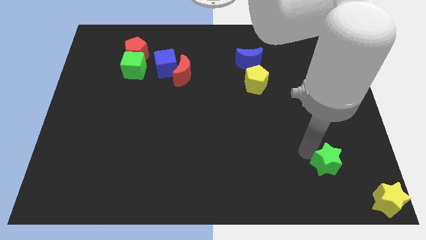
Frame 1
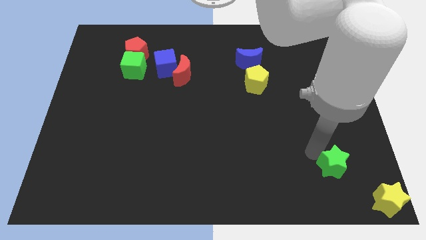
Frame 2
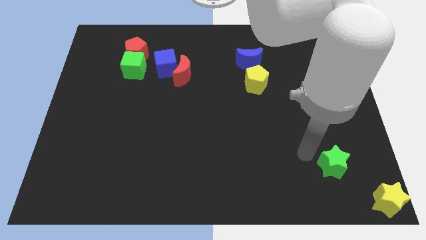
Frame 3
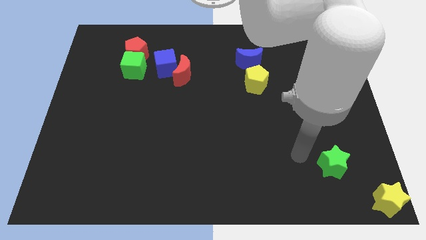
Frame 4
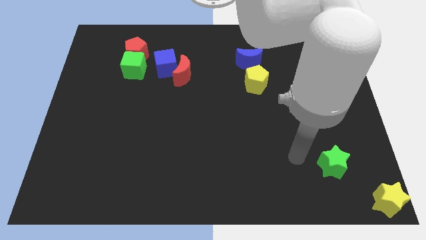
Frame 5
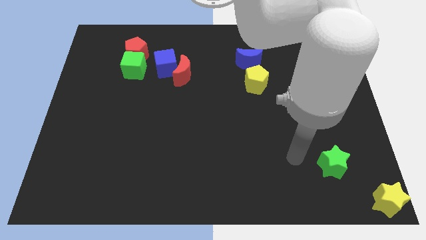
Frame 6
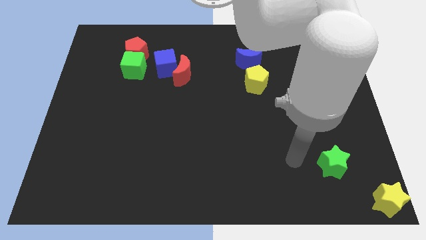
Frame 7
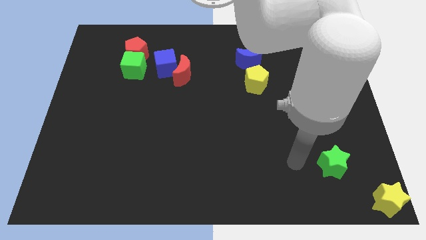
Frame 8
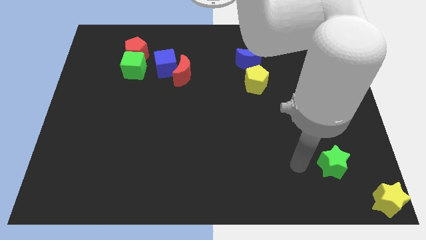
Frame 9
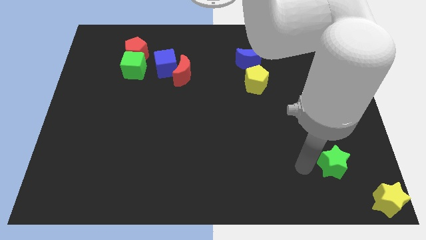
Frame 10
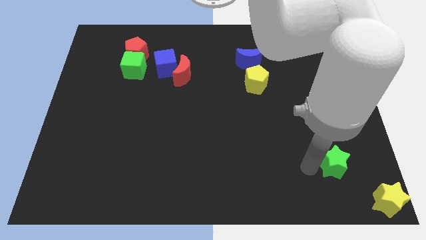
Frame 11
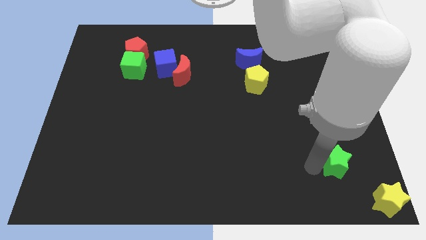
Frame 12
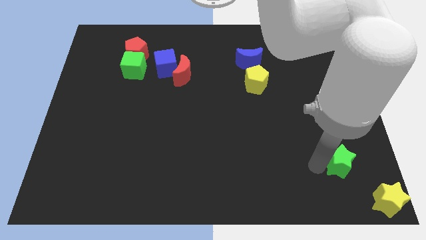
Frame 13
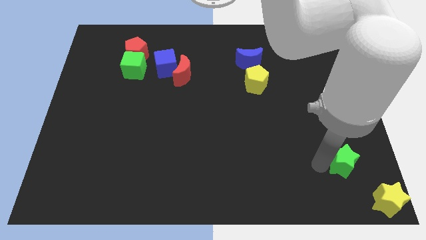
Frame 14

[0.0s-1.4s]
move the green star diagonally to the yellow star

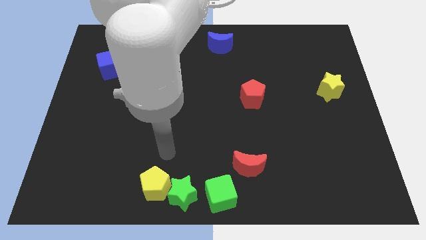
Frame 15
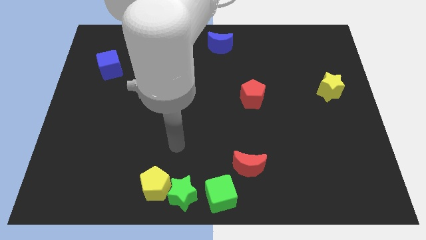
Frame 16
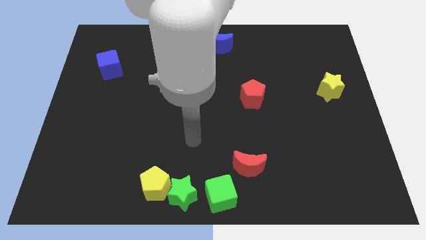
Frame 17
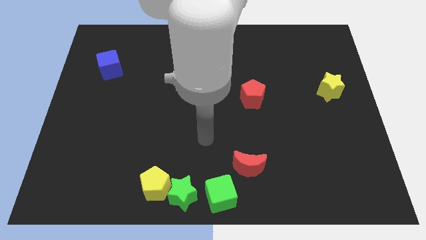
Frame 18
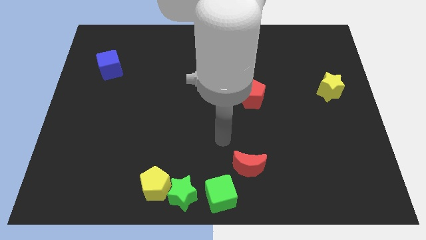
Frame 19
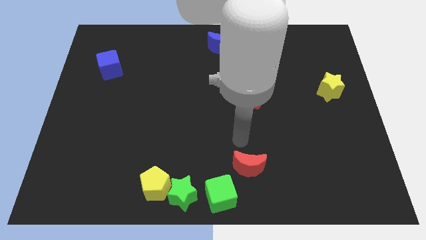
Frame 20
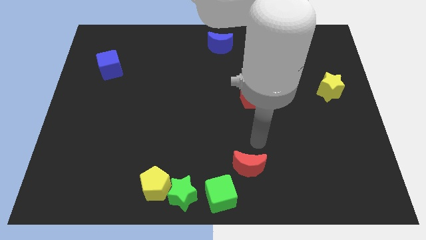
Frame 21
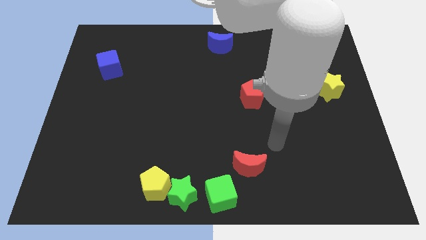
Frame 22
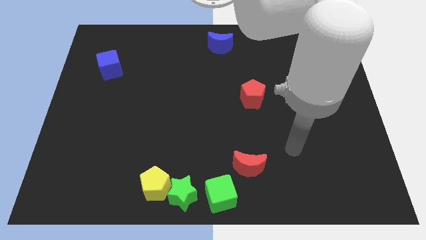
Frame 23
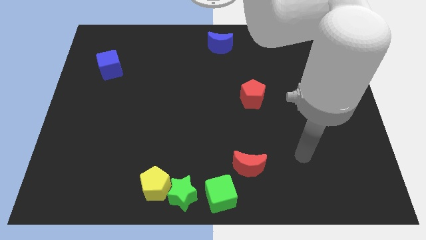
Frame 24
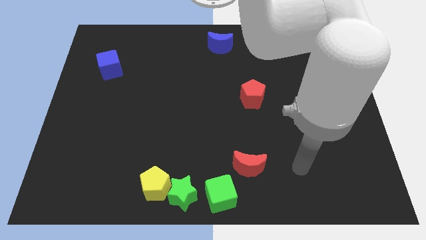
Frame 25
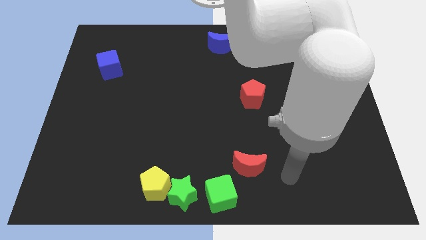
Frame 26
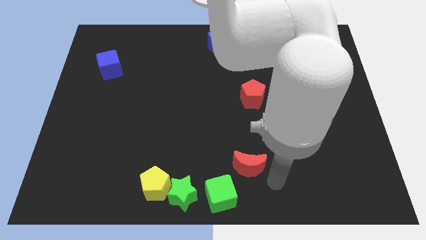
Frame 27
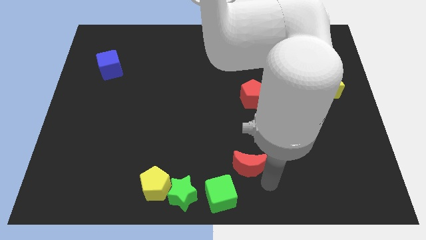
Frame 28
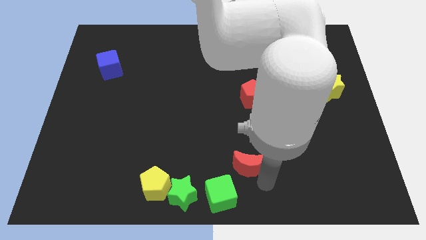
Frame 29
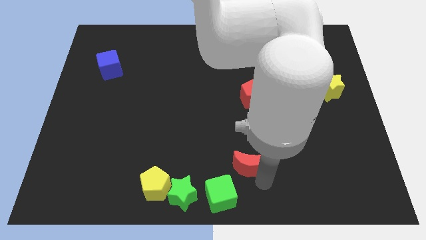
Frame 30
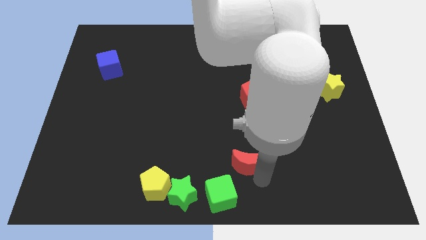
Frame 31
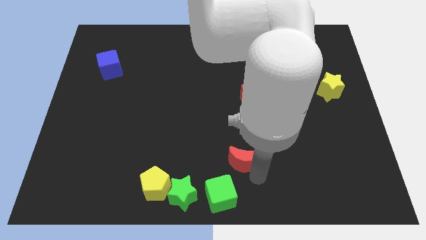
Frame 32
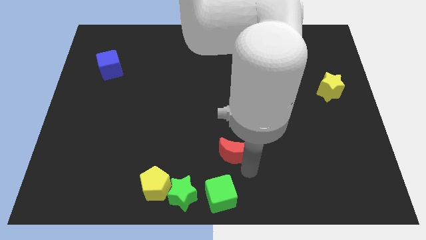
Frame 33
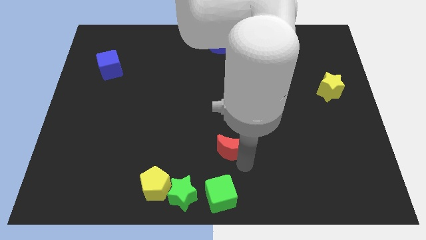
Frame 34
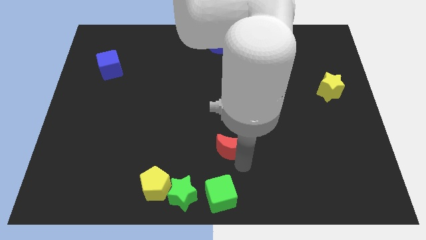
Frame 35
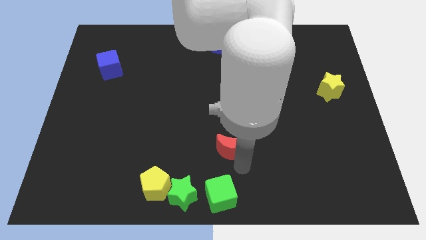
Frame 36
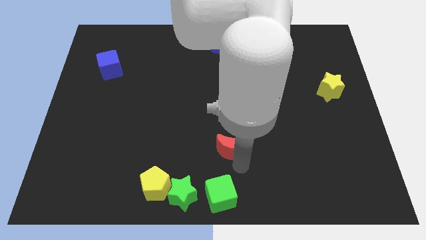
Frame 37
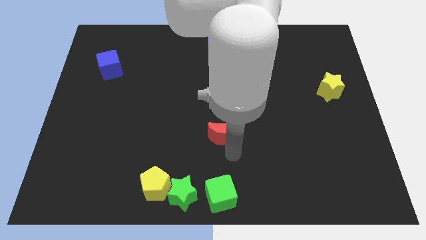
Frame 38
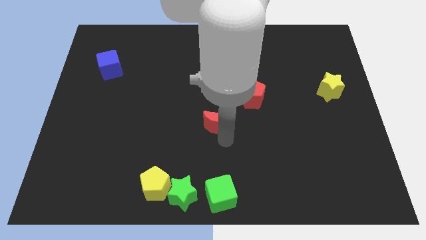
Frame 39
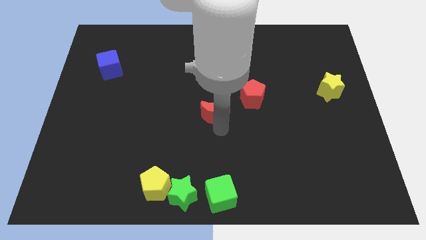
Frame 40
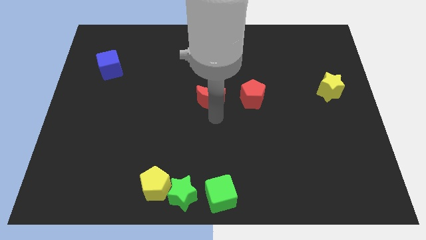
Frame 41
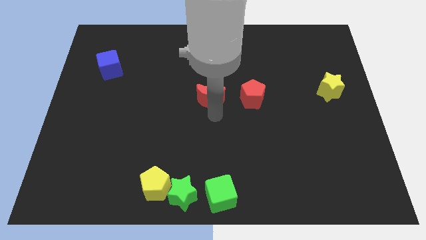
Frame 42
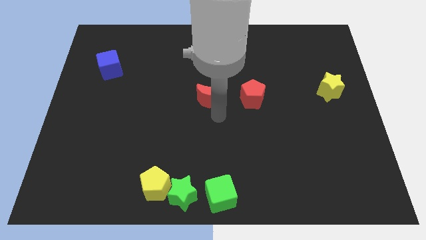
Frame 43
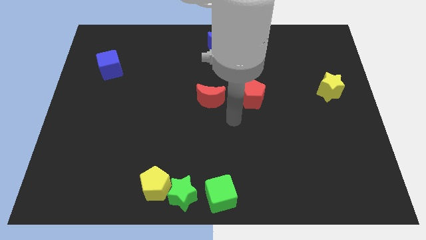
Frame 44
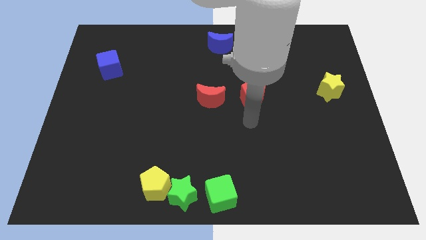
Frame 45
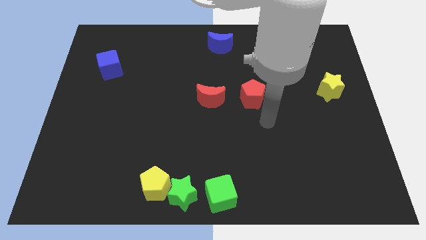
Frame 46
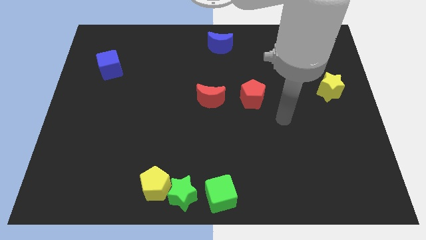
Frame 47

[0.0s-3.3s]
move the red crescent horizontally to the left side of the red pentagon

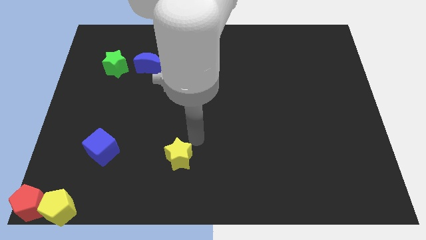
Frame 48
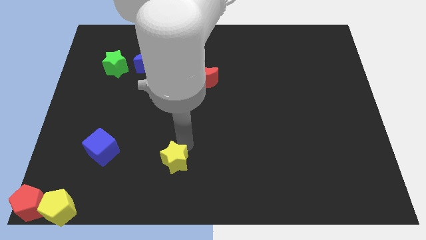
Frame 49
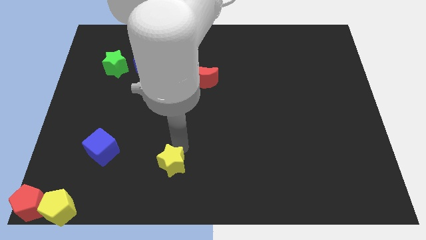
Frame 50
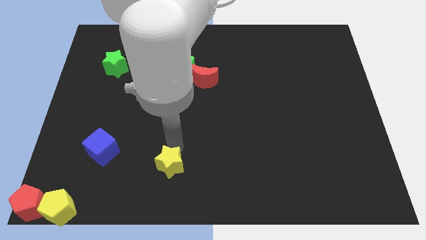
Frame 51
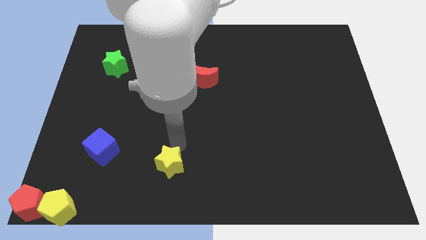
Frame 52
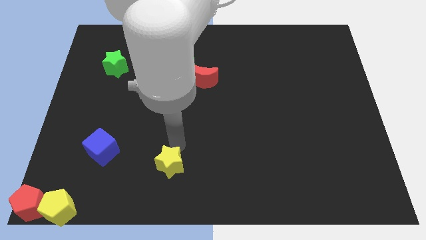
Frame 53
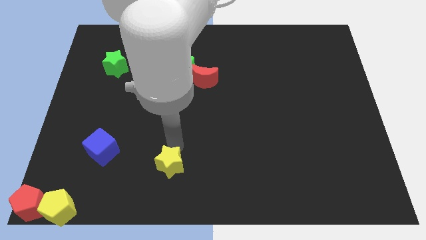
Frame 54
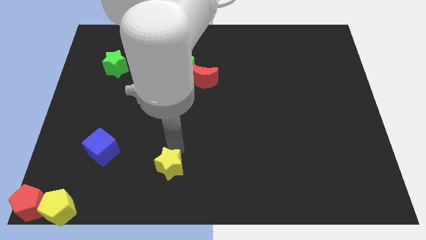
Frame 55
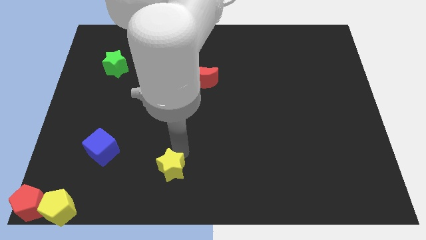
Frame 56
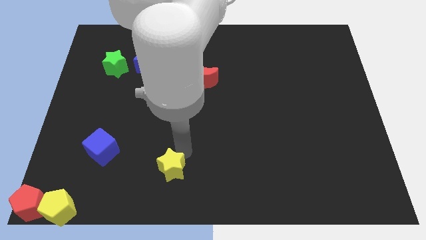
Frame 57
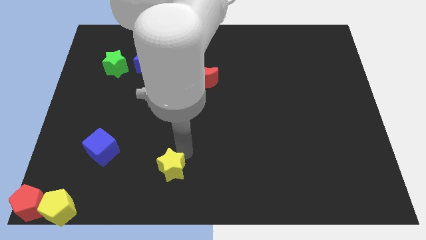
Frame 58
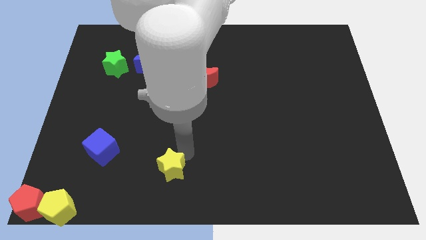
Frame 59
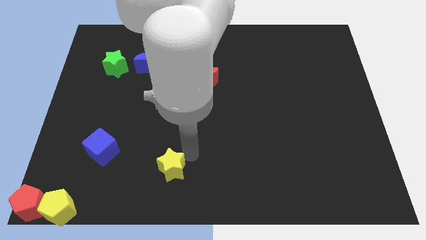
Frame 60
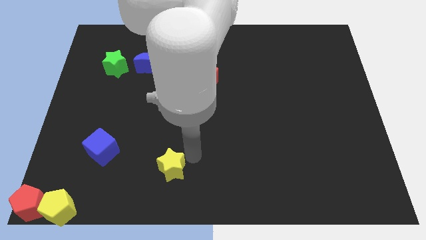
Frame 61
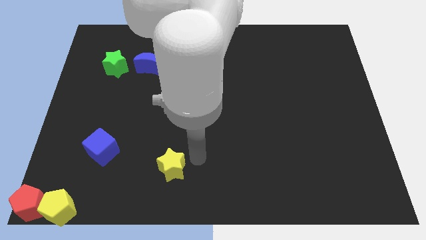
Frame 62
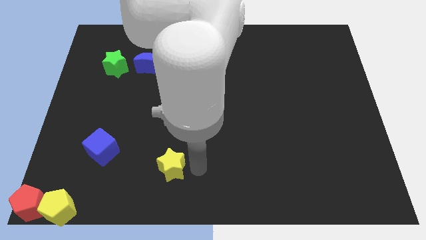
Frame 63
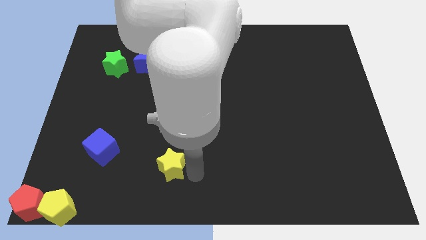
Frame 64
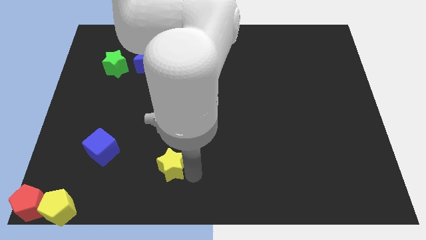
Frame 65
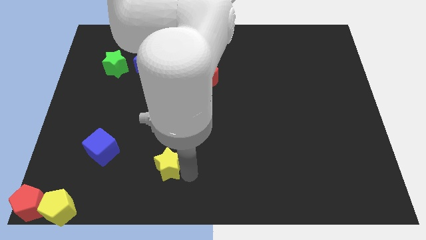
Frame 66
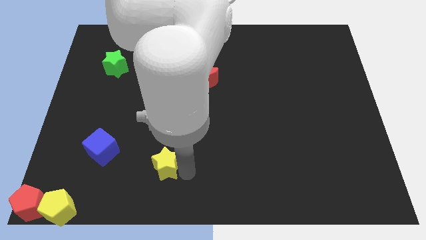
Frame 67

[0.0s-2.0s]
push the yellow star slightly downwards

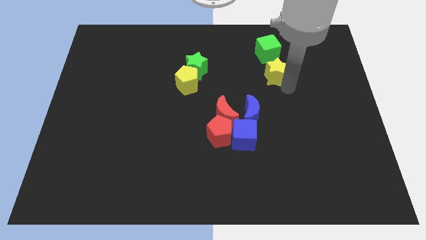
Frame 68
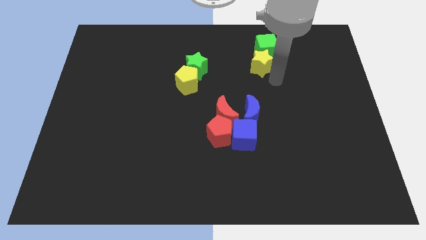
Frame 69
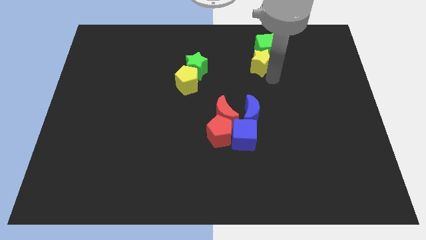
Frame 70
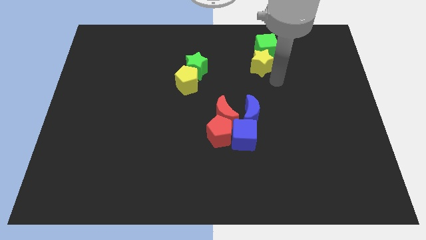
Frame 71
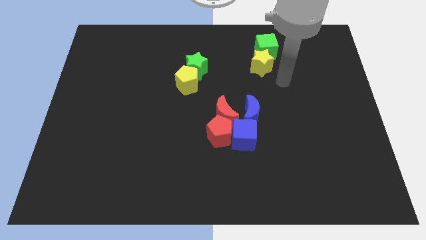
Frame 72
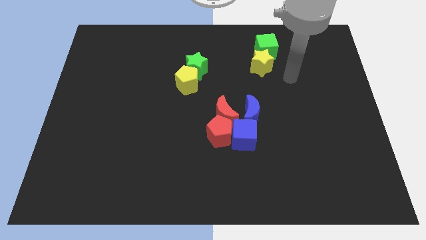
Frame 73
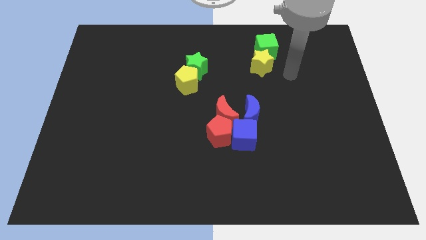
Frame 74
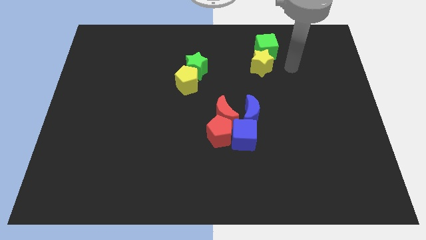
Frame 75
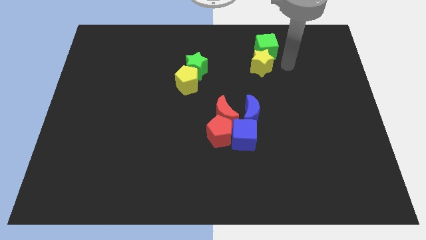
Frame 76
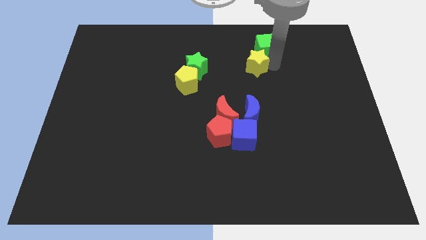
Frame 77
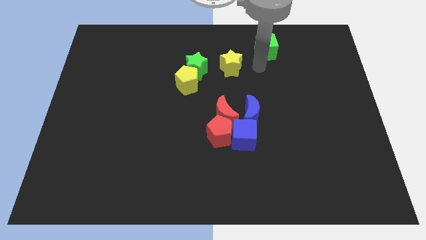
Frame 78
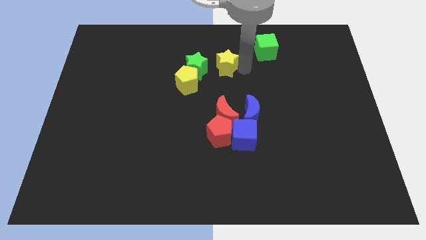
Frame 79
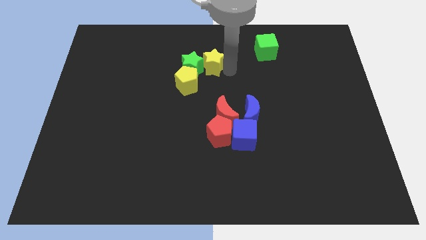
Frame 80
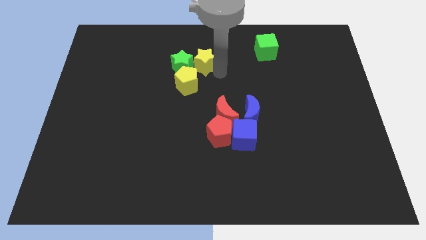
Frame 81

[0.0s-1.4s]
drag yellow star near green star

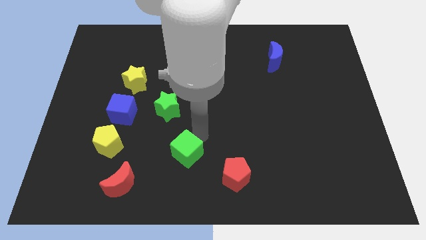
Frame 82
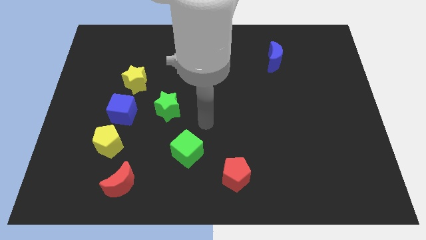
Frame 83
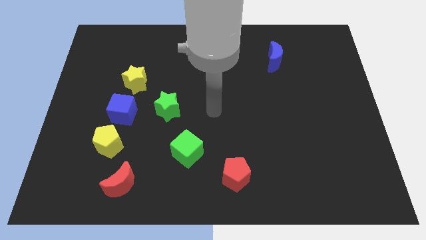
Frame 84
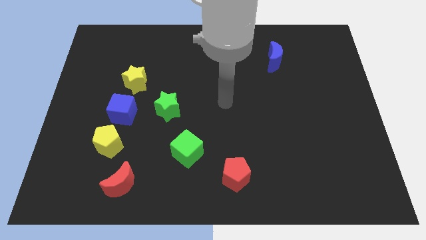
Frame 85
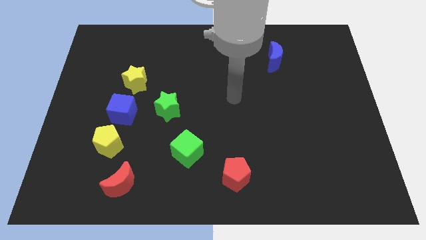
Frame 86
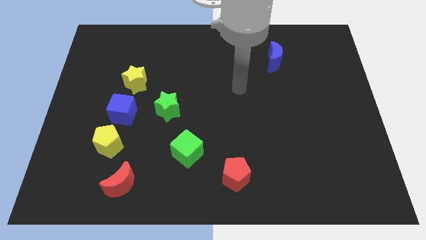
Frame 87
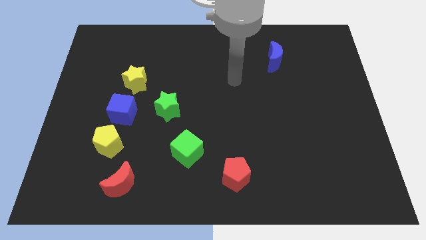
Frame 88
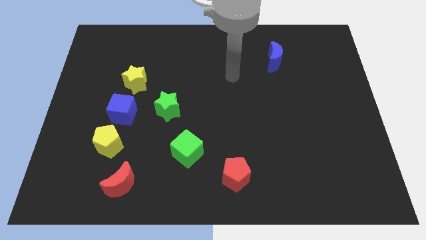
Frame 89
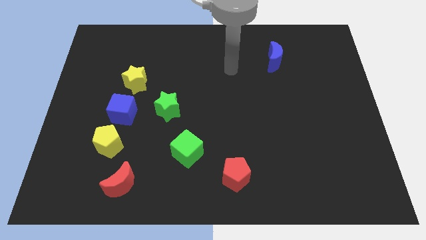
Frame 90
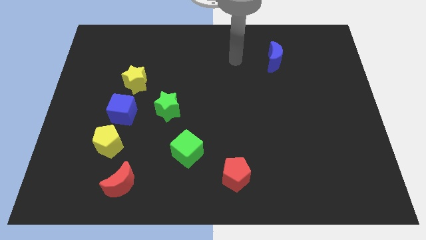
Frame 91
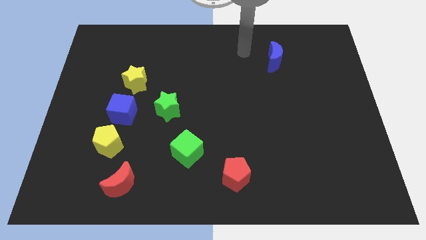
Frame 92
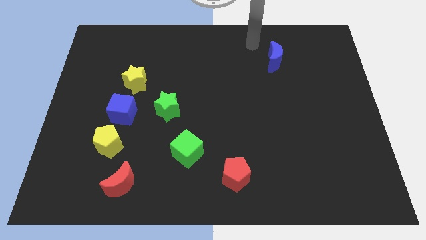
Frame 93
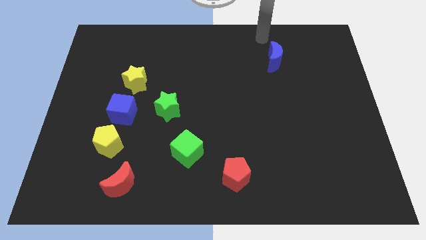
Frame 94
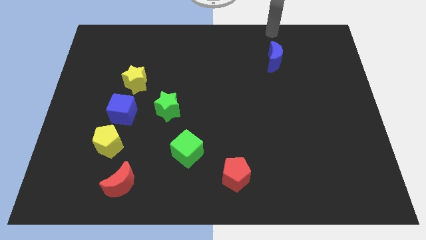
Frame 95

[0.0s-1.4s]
move your arm away from the green cube
